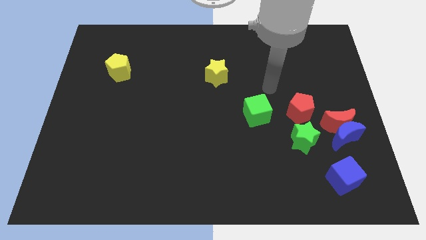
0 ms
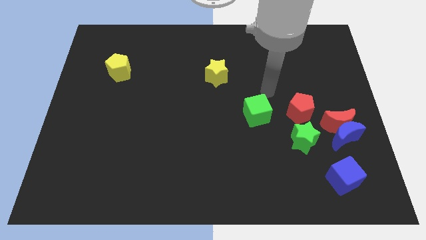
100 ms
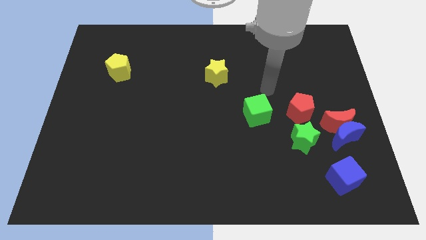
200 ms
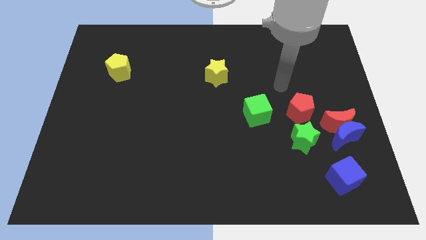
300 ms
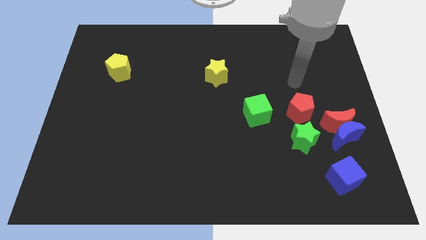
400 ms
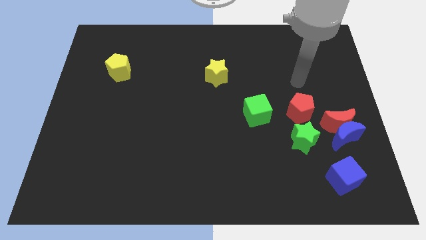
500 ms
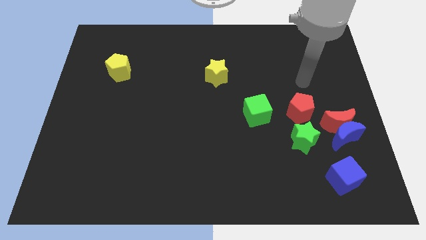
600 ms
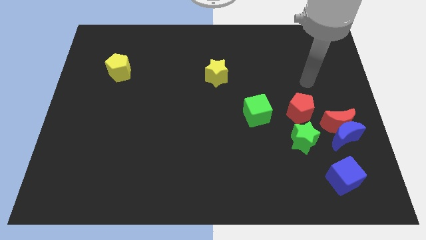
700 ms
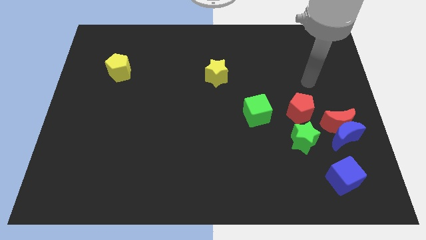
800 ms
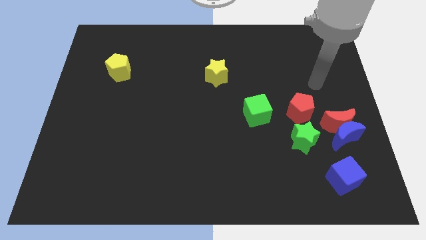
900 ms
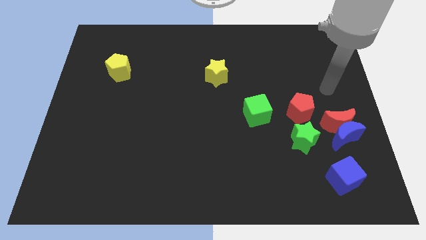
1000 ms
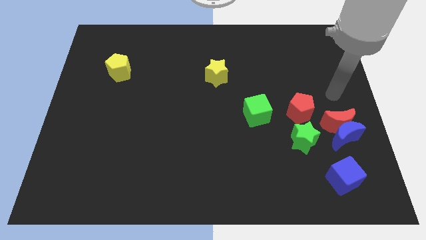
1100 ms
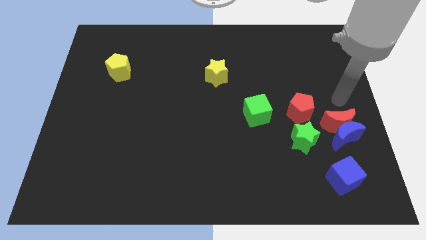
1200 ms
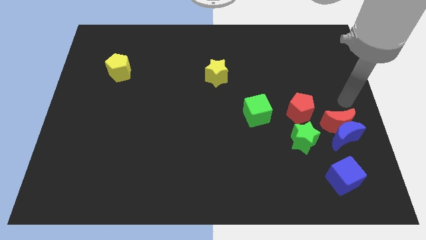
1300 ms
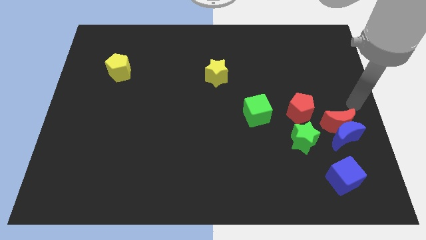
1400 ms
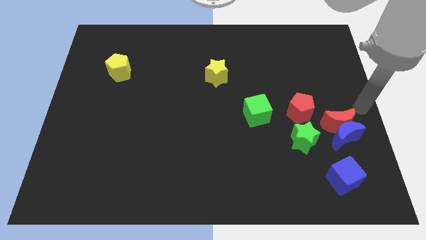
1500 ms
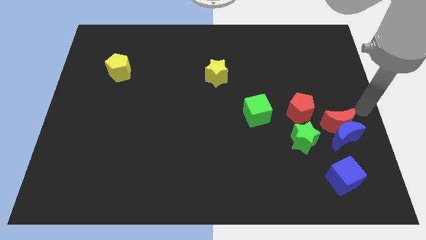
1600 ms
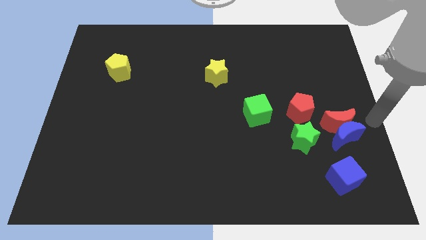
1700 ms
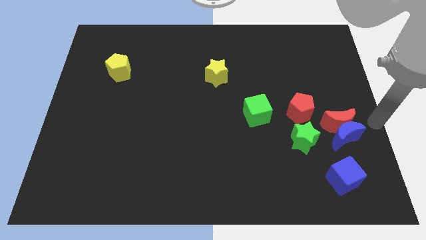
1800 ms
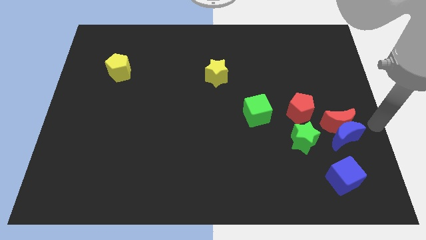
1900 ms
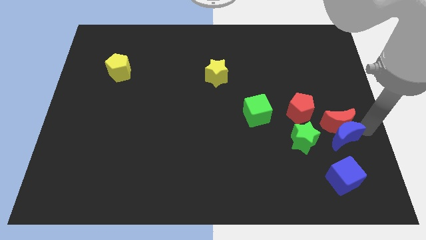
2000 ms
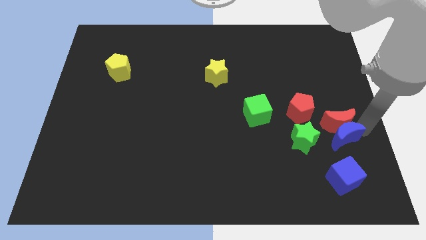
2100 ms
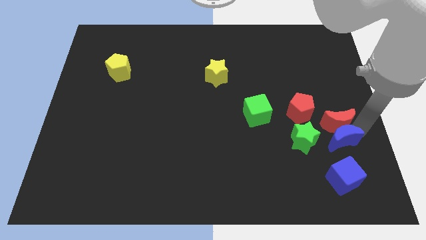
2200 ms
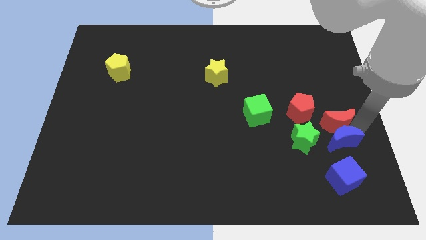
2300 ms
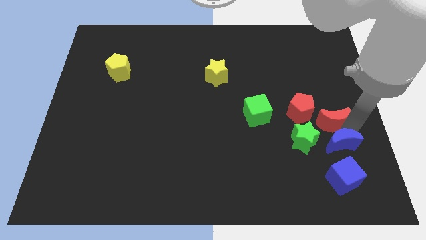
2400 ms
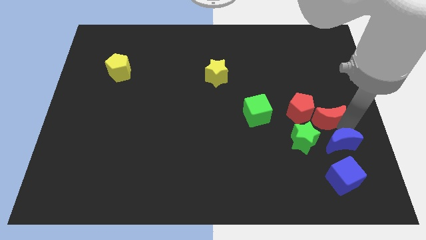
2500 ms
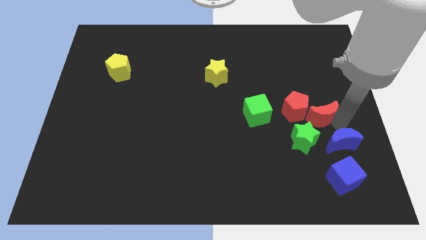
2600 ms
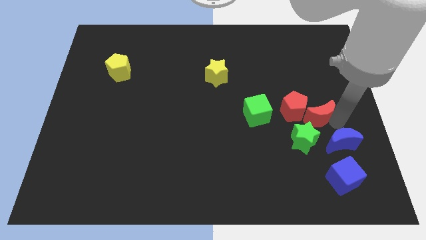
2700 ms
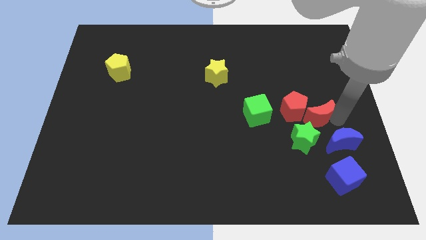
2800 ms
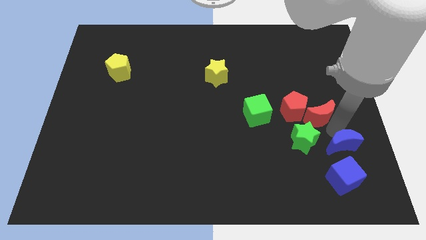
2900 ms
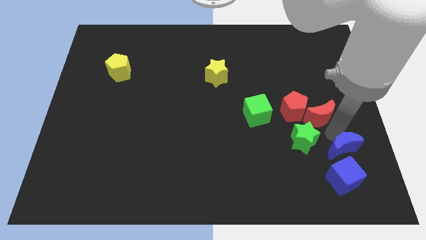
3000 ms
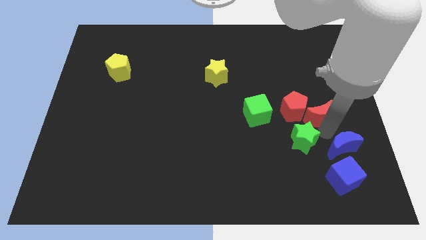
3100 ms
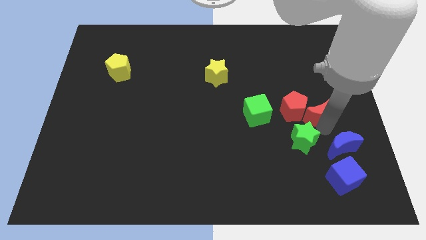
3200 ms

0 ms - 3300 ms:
separate blue moon fro red moon

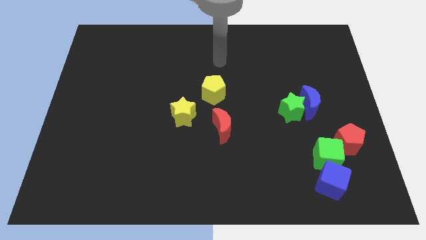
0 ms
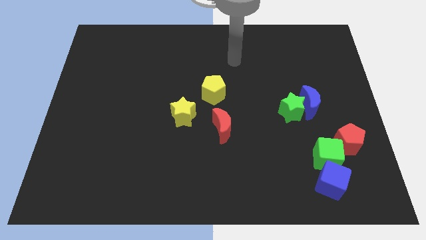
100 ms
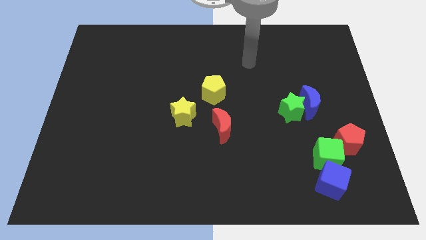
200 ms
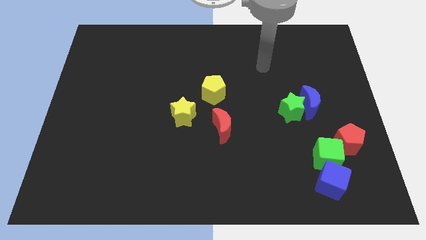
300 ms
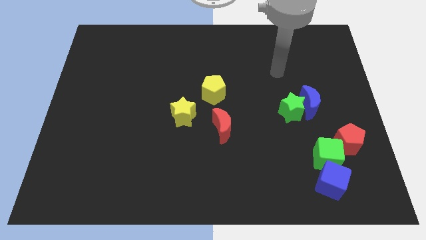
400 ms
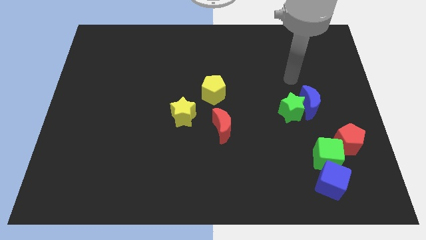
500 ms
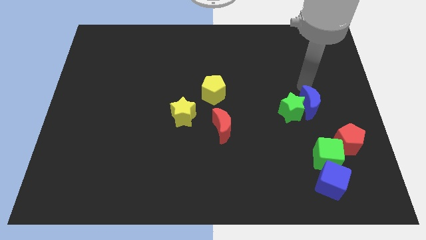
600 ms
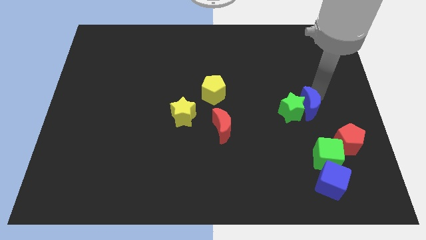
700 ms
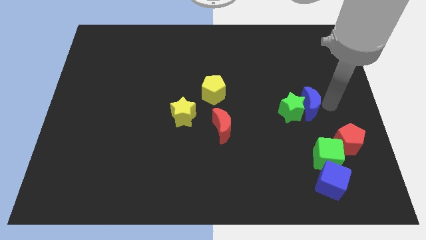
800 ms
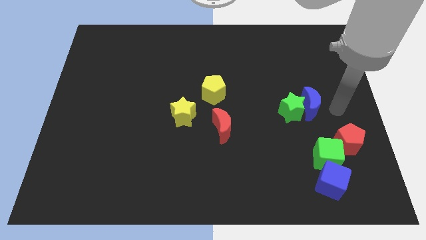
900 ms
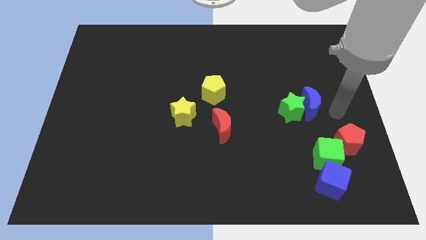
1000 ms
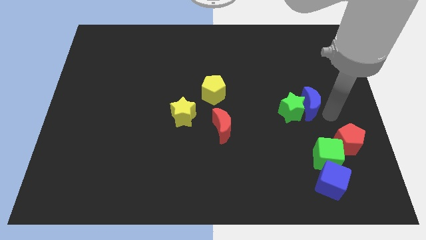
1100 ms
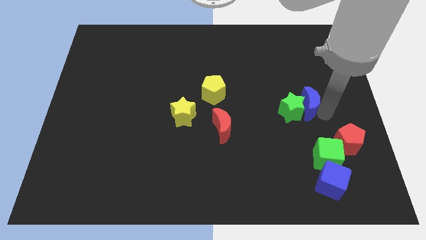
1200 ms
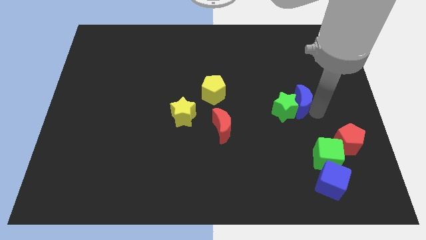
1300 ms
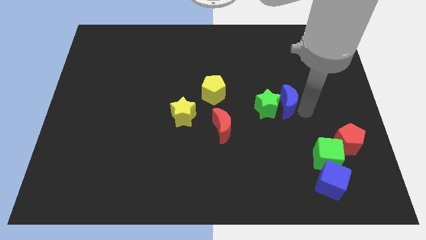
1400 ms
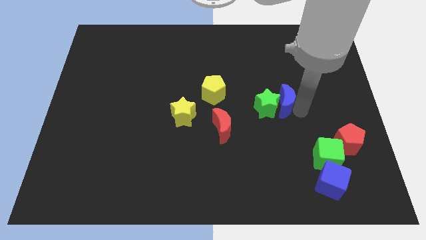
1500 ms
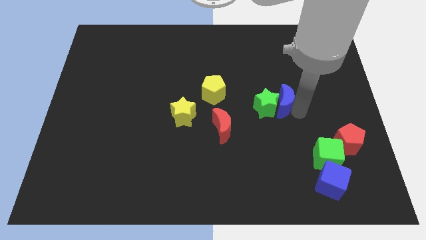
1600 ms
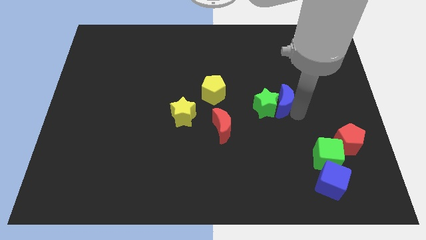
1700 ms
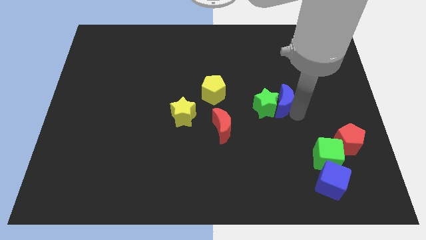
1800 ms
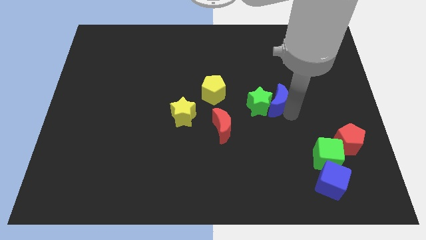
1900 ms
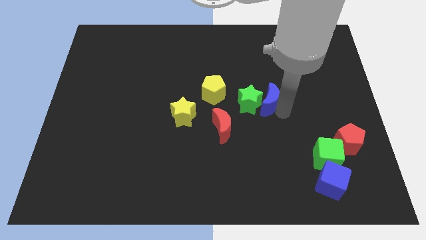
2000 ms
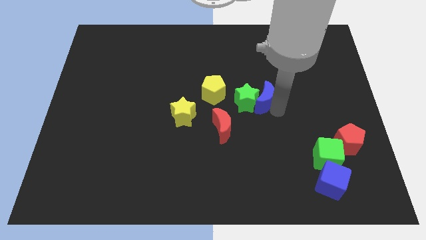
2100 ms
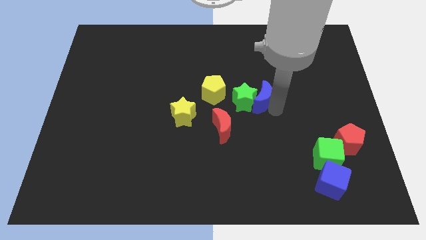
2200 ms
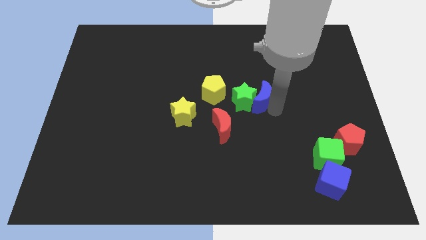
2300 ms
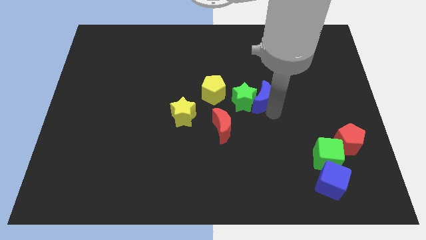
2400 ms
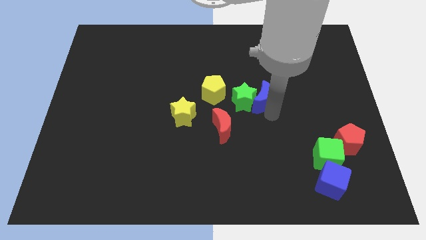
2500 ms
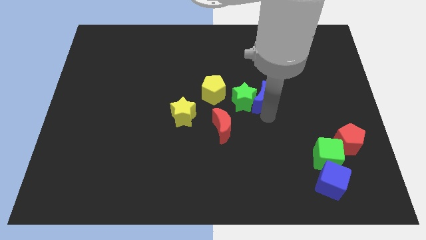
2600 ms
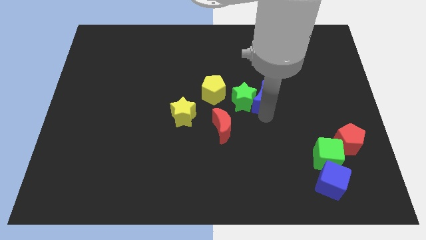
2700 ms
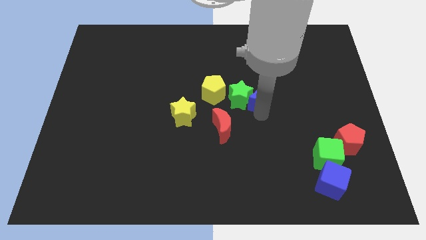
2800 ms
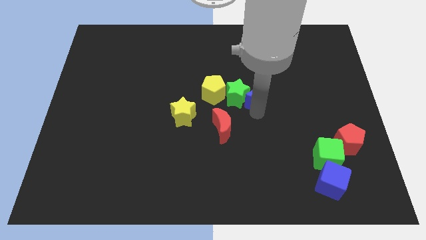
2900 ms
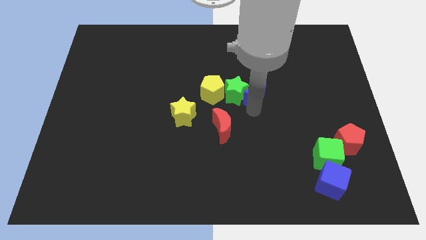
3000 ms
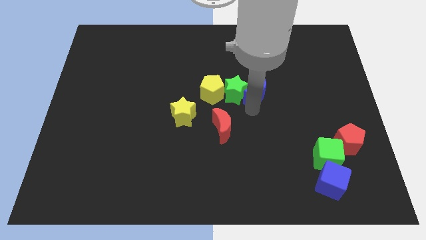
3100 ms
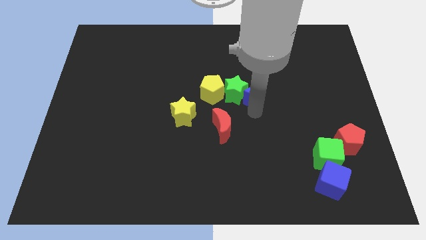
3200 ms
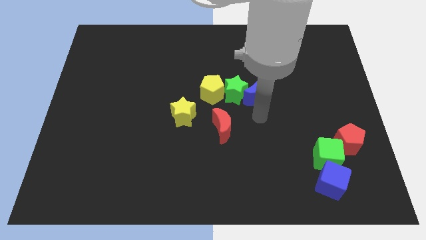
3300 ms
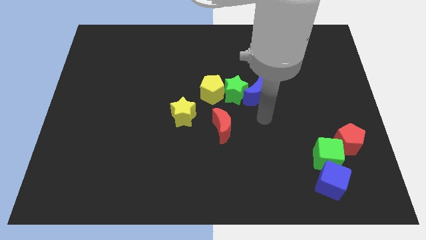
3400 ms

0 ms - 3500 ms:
move the blue crescent and the green star into the yellow pentagon

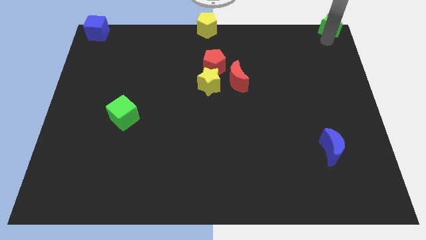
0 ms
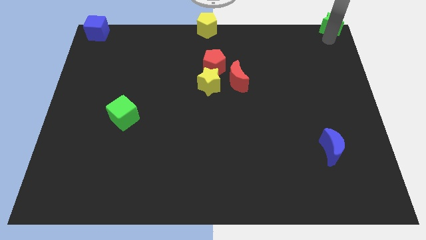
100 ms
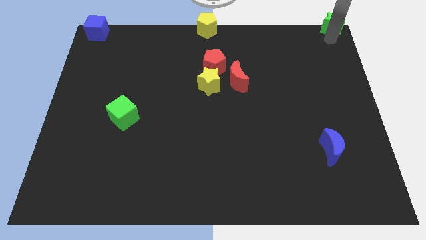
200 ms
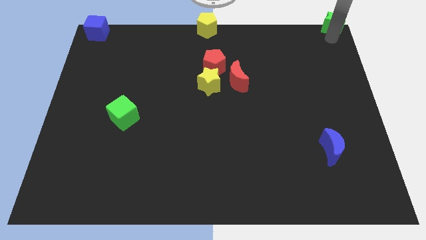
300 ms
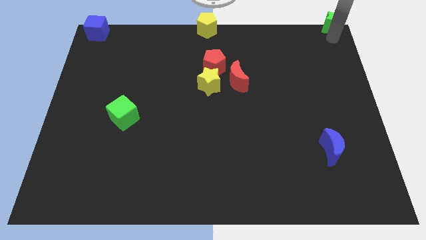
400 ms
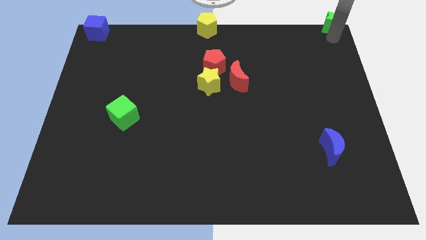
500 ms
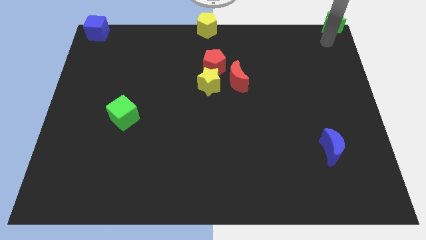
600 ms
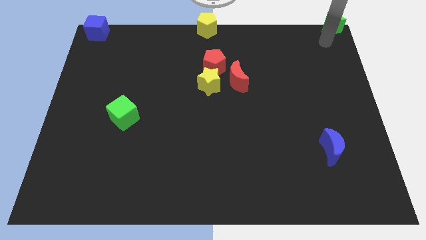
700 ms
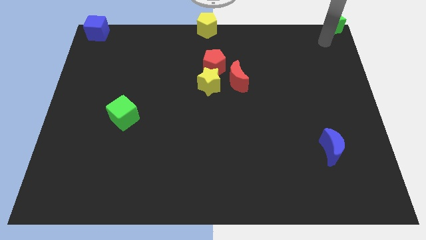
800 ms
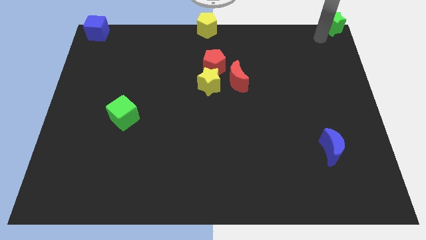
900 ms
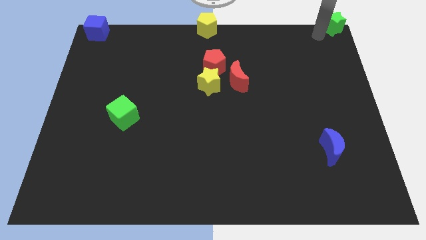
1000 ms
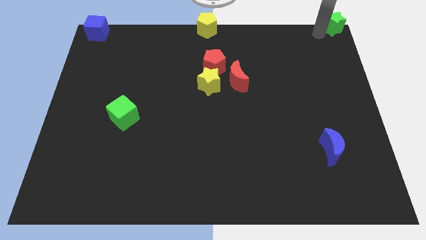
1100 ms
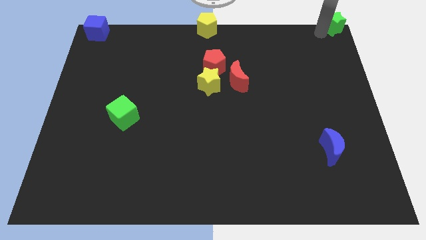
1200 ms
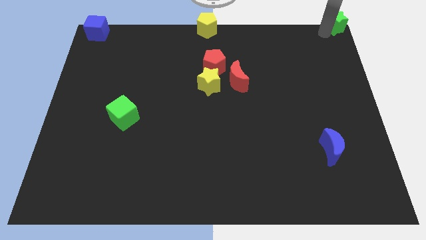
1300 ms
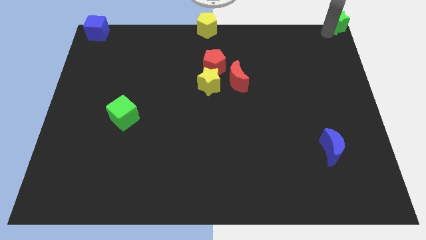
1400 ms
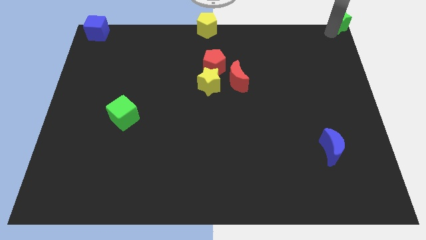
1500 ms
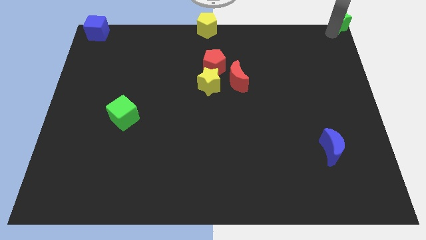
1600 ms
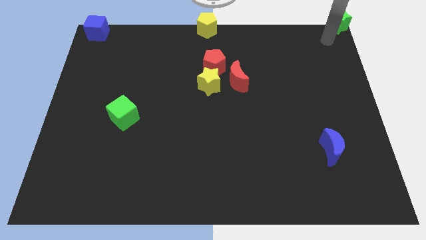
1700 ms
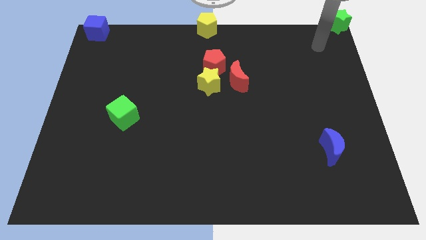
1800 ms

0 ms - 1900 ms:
put the green star at the top right

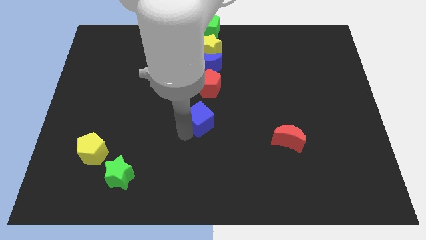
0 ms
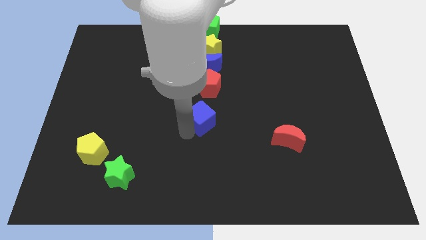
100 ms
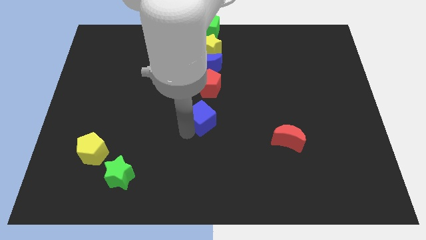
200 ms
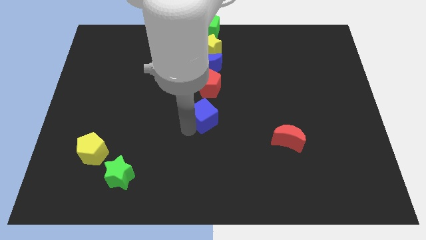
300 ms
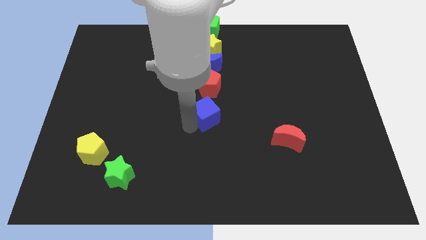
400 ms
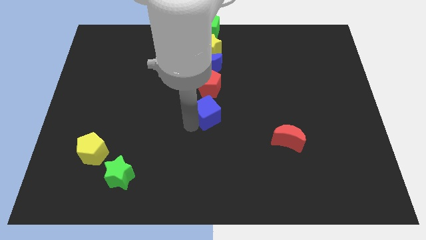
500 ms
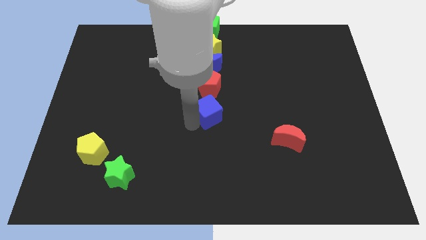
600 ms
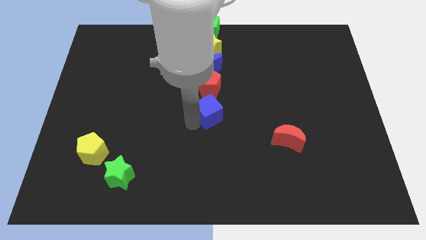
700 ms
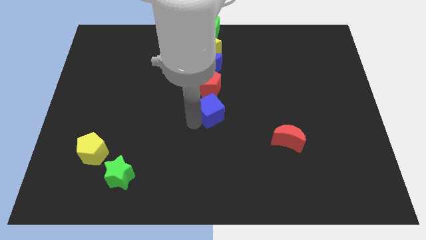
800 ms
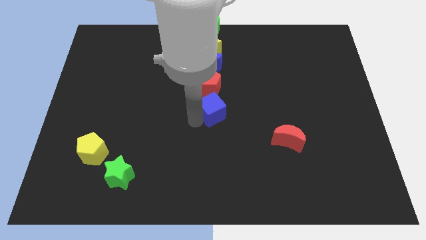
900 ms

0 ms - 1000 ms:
place the blue cube below the red pentagon
